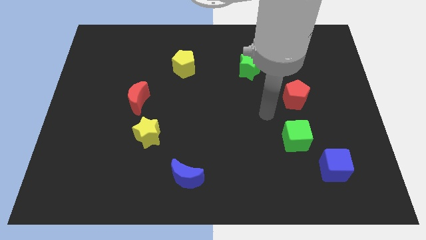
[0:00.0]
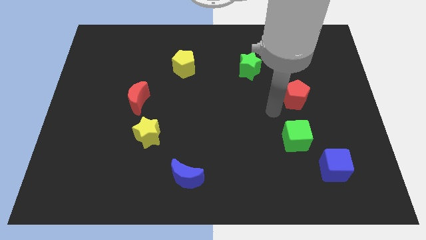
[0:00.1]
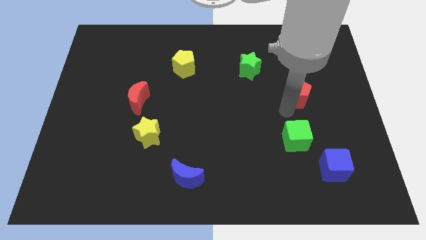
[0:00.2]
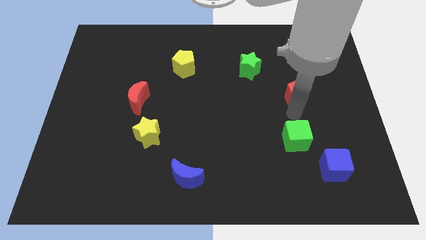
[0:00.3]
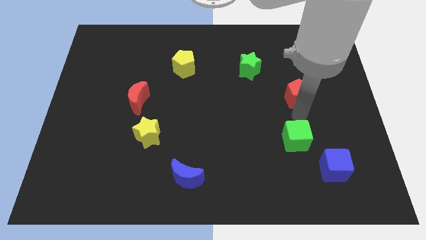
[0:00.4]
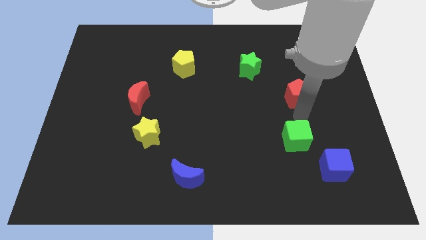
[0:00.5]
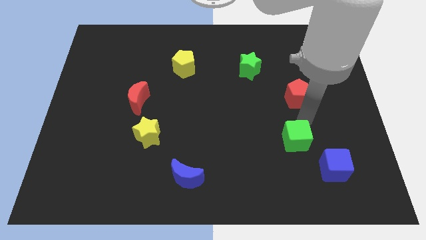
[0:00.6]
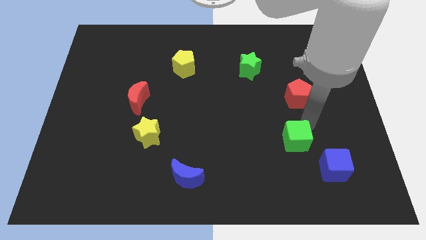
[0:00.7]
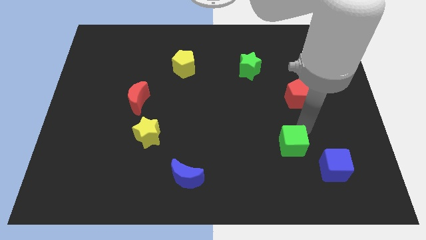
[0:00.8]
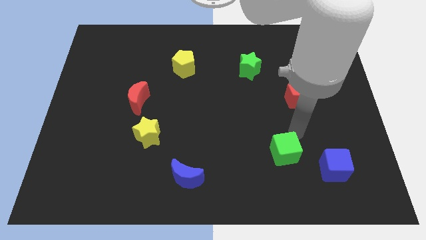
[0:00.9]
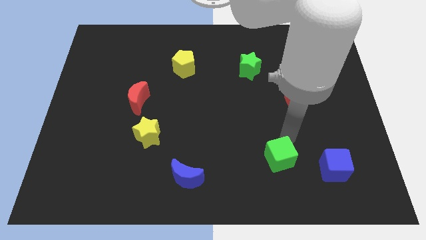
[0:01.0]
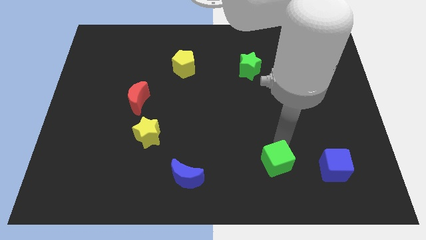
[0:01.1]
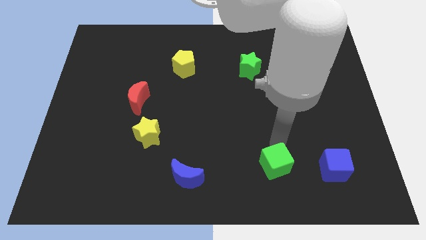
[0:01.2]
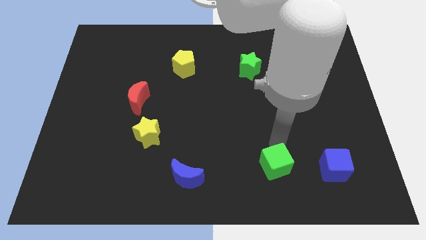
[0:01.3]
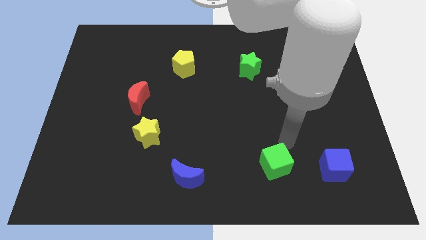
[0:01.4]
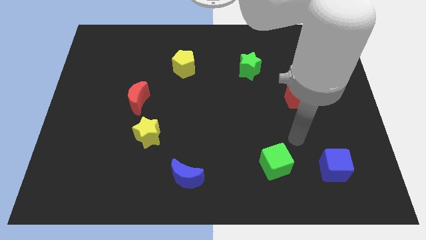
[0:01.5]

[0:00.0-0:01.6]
move the green cube left to the blue cube

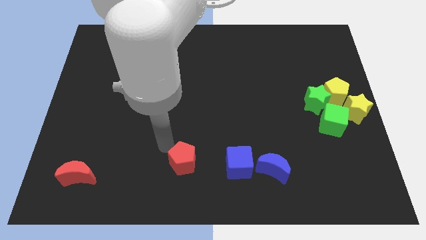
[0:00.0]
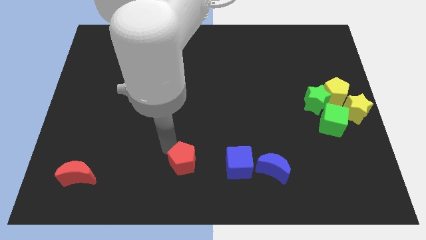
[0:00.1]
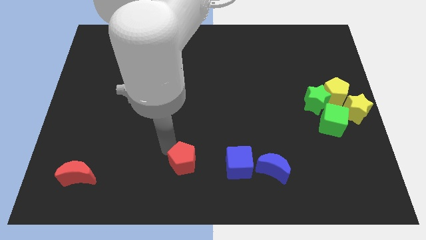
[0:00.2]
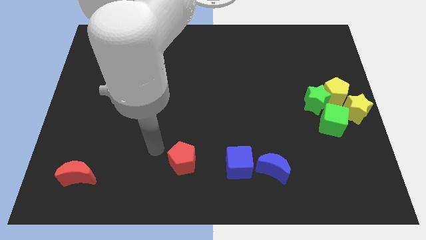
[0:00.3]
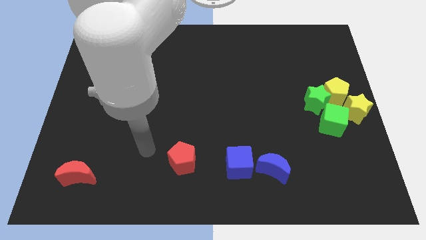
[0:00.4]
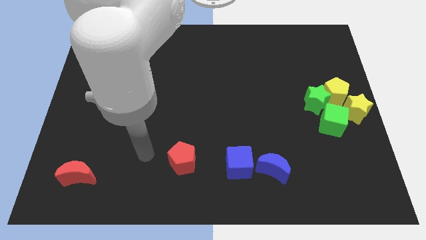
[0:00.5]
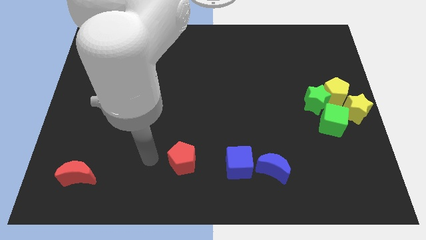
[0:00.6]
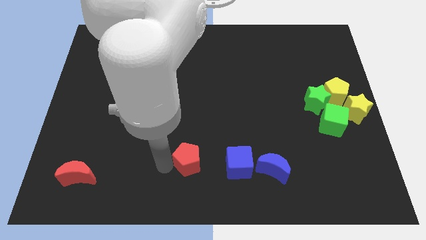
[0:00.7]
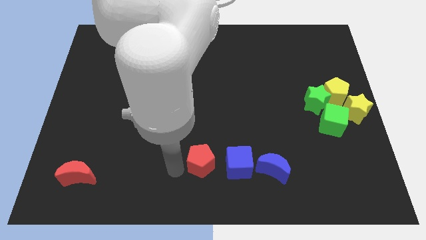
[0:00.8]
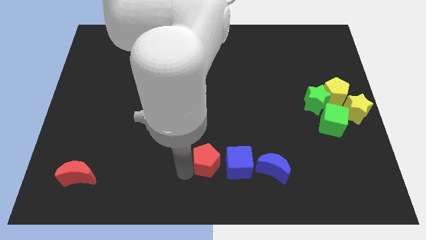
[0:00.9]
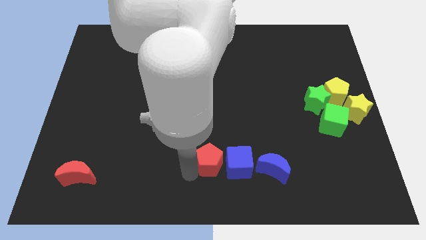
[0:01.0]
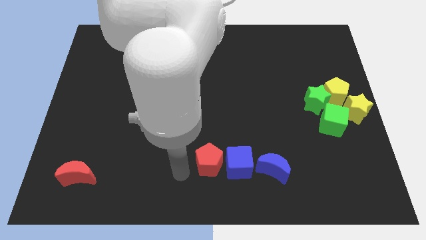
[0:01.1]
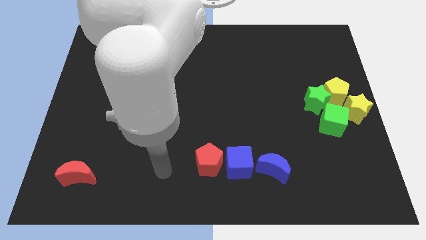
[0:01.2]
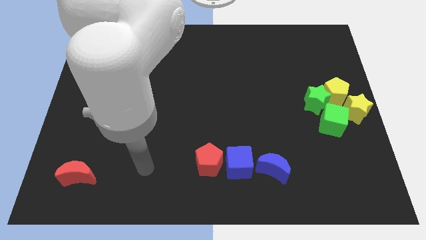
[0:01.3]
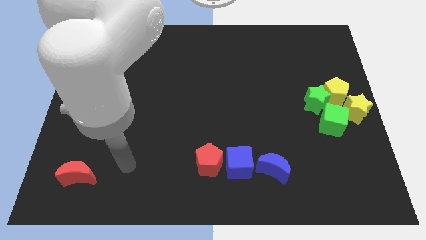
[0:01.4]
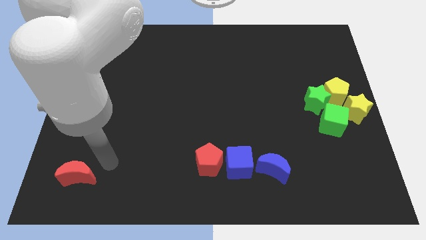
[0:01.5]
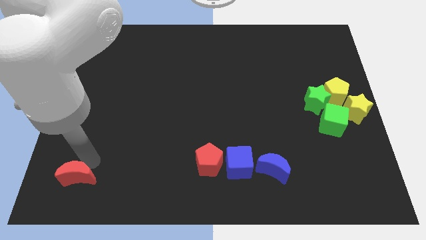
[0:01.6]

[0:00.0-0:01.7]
place red pentagon left to the blue cube

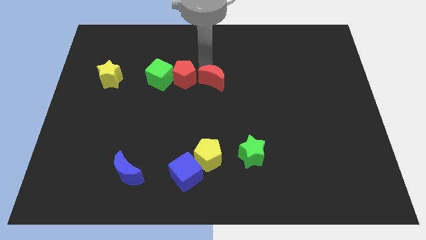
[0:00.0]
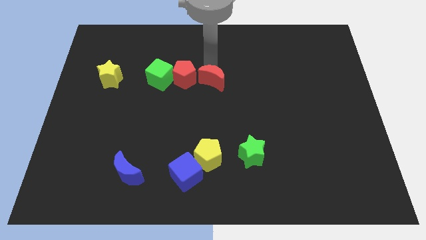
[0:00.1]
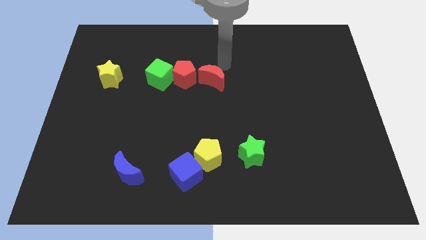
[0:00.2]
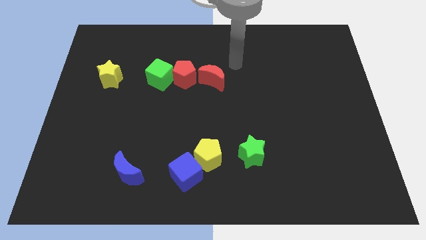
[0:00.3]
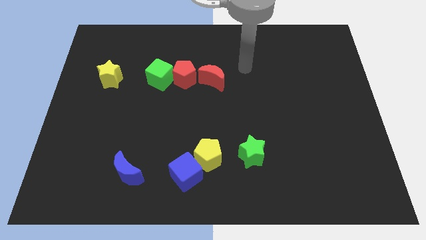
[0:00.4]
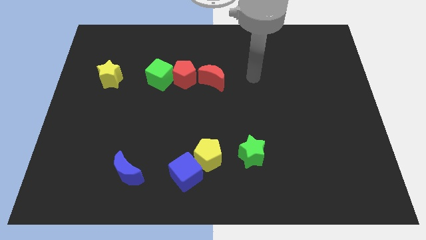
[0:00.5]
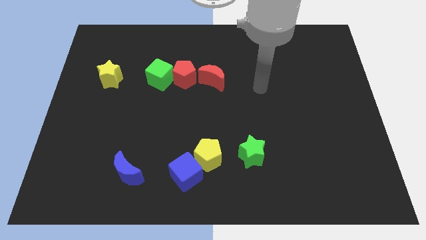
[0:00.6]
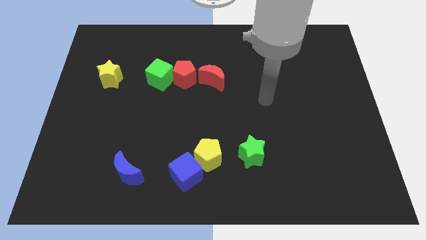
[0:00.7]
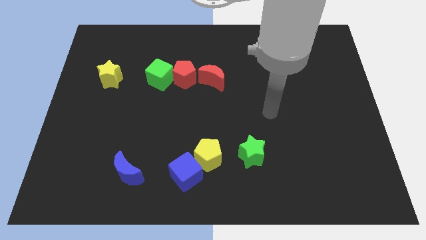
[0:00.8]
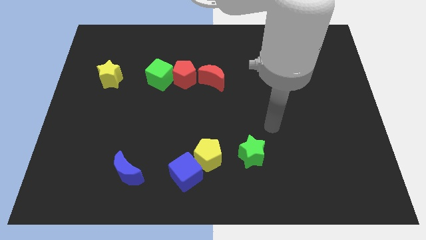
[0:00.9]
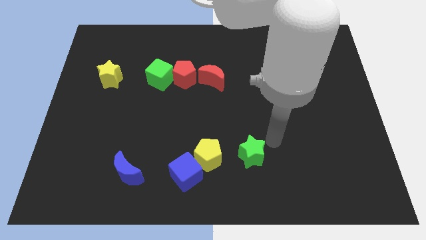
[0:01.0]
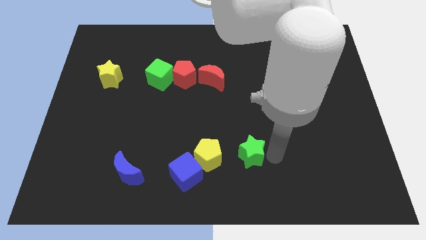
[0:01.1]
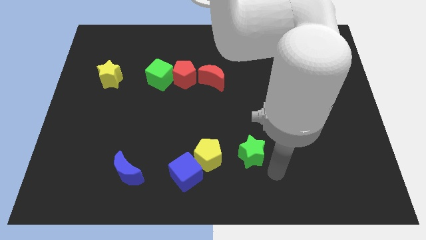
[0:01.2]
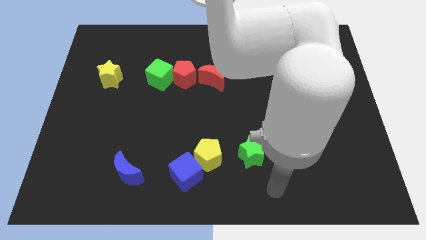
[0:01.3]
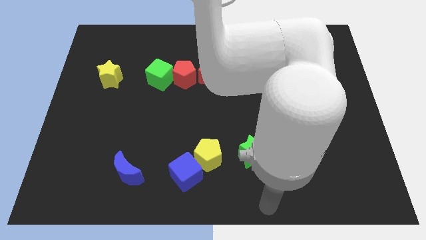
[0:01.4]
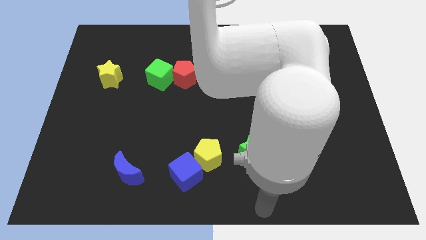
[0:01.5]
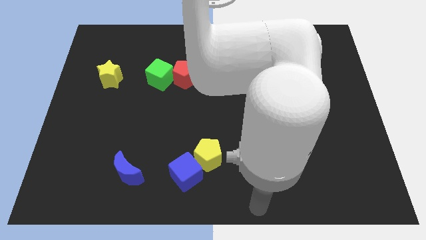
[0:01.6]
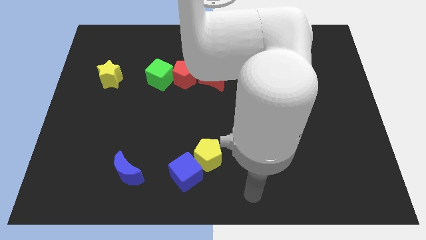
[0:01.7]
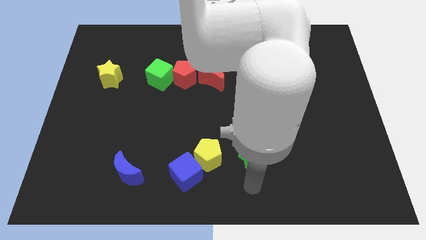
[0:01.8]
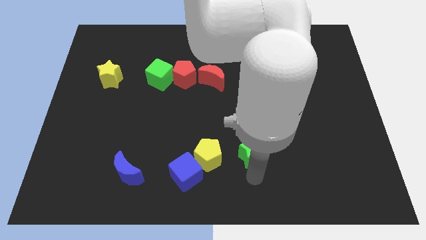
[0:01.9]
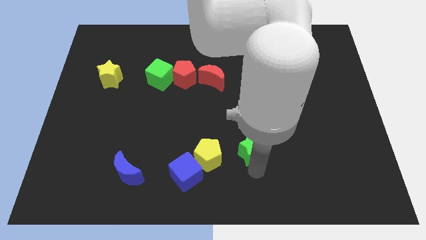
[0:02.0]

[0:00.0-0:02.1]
move your arm away from the red moon

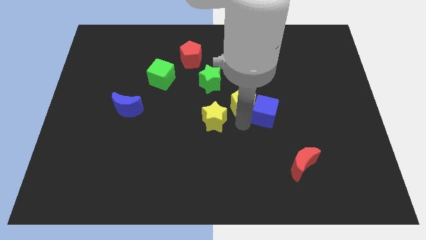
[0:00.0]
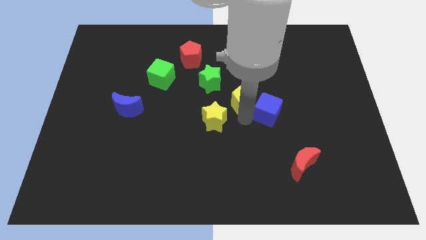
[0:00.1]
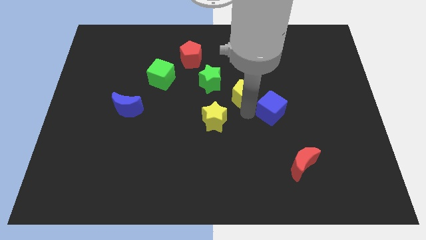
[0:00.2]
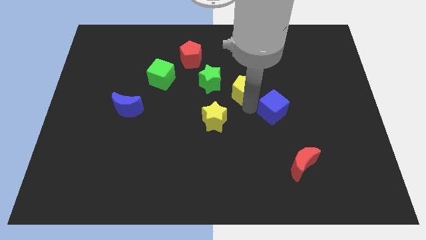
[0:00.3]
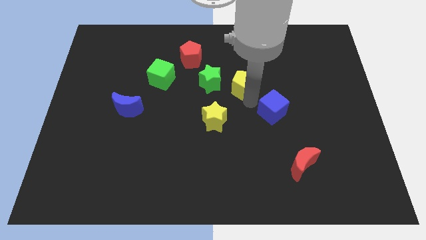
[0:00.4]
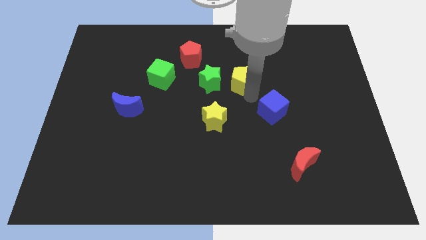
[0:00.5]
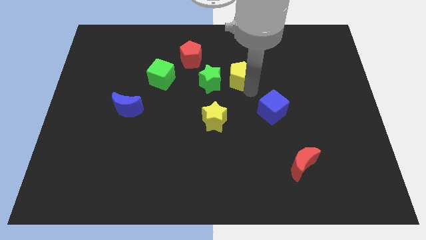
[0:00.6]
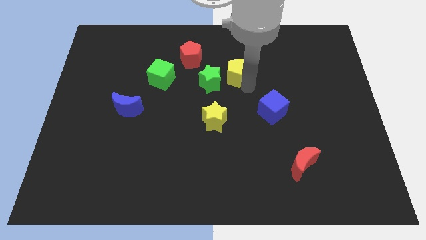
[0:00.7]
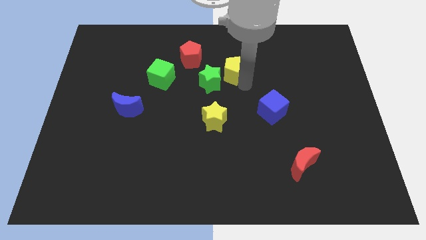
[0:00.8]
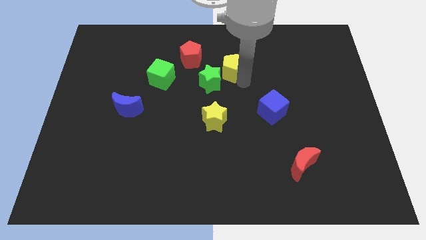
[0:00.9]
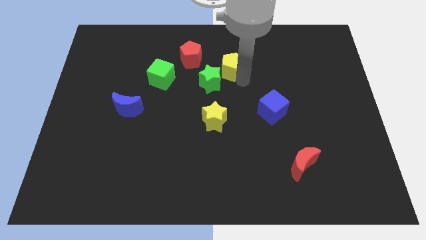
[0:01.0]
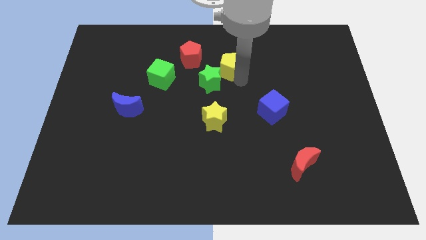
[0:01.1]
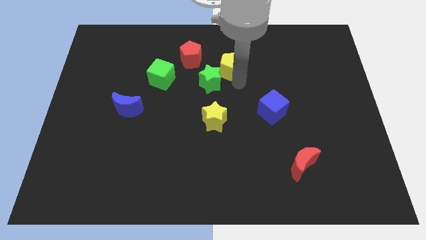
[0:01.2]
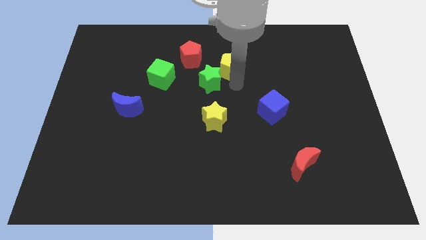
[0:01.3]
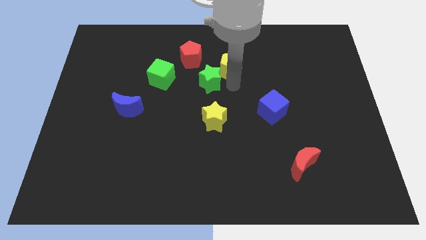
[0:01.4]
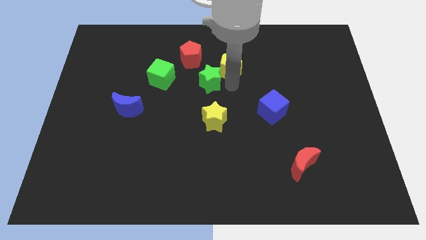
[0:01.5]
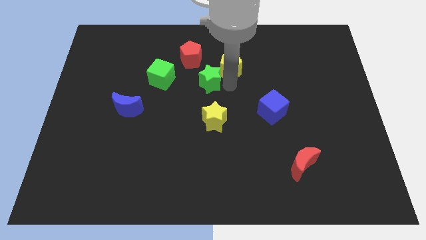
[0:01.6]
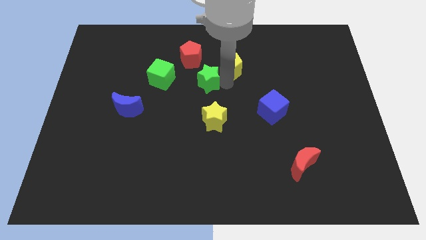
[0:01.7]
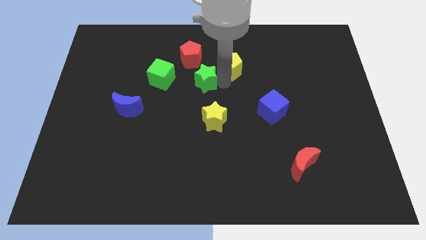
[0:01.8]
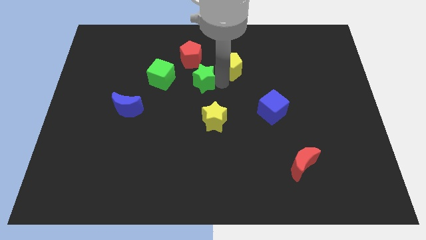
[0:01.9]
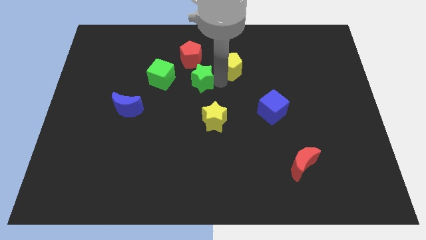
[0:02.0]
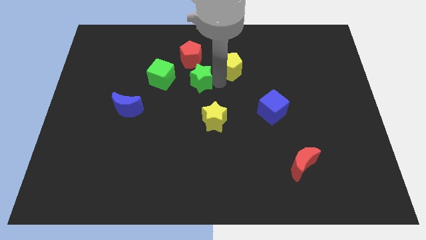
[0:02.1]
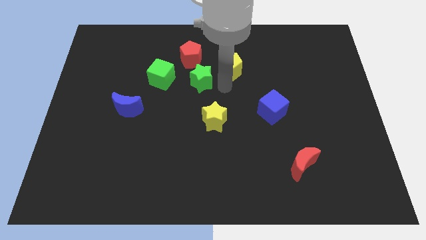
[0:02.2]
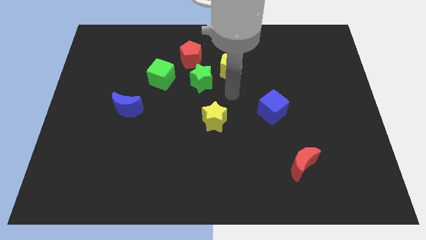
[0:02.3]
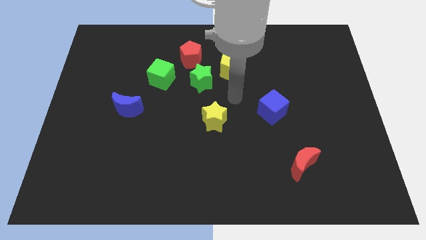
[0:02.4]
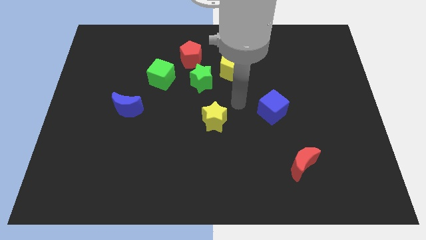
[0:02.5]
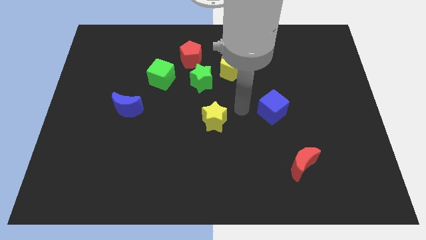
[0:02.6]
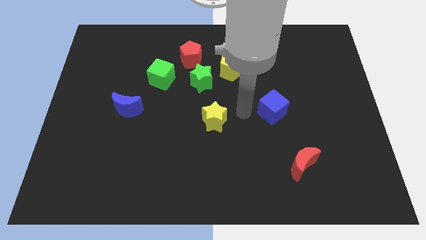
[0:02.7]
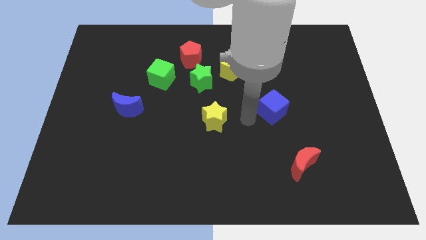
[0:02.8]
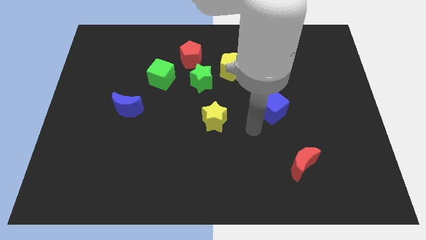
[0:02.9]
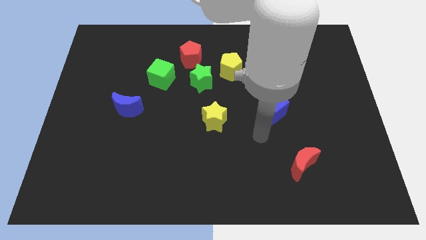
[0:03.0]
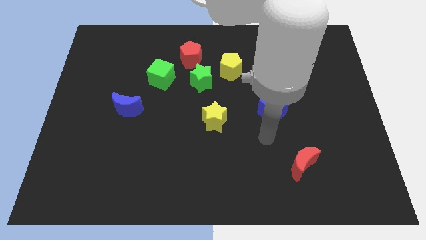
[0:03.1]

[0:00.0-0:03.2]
place green star below red pentagon

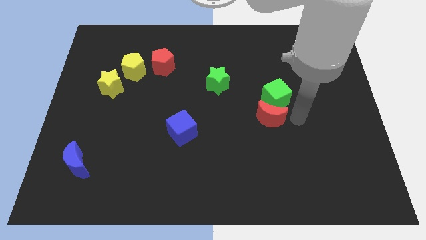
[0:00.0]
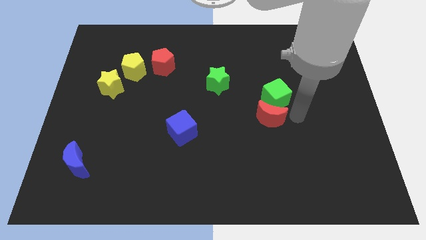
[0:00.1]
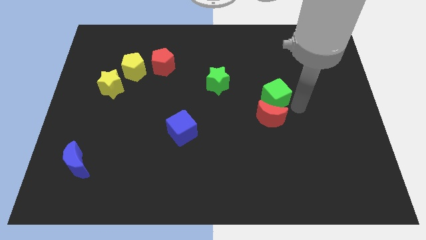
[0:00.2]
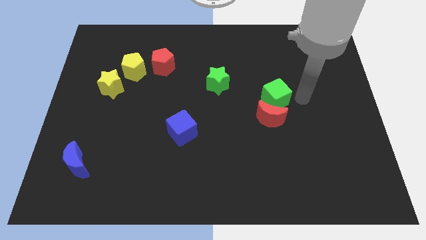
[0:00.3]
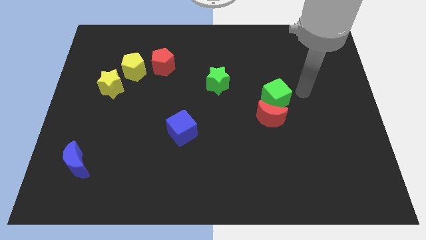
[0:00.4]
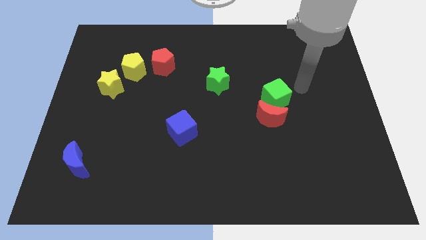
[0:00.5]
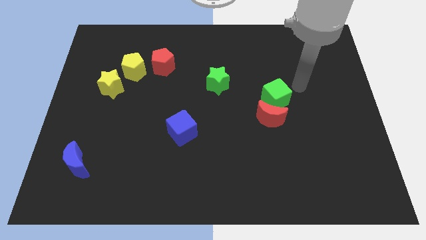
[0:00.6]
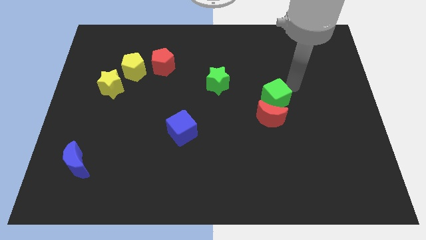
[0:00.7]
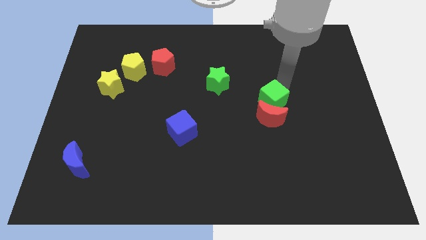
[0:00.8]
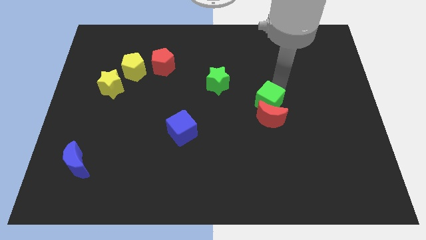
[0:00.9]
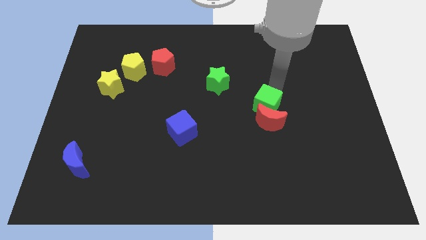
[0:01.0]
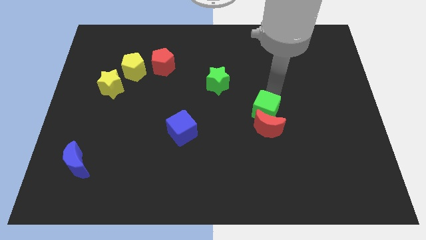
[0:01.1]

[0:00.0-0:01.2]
push the green cube into the red moon
